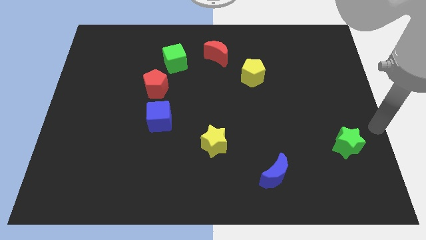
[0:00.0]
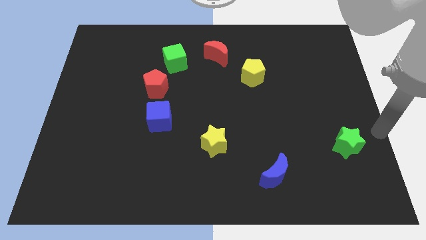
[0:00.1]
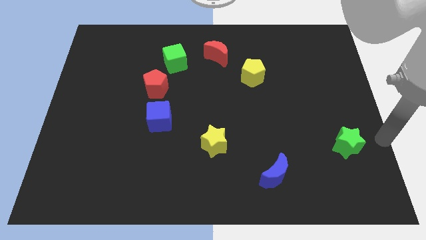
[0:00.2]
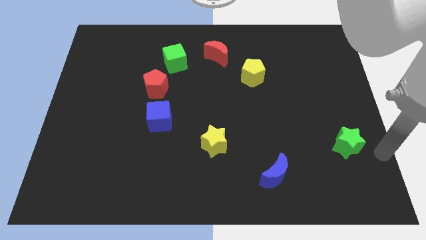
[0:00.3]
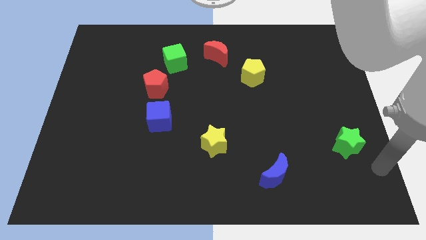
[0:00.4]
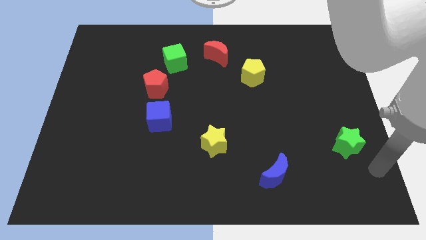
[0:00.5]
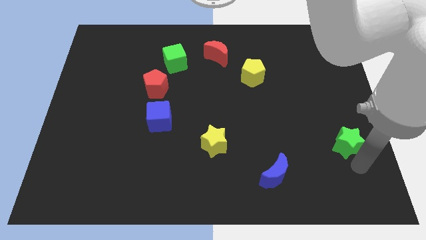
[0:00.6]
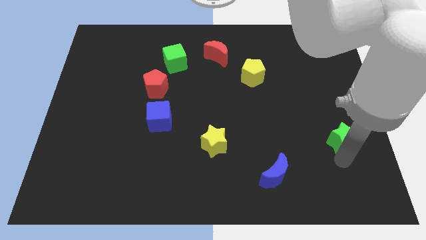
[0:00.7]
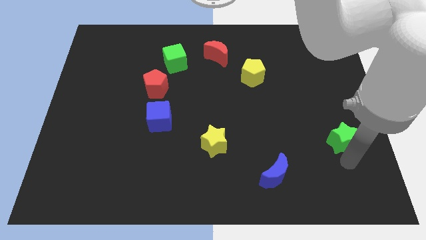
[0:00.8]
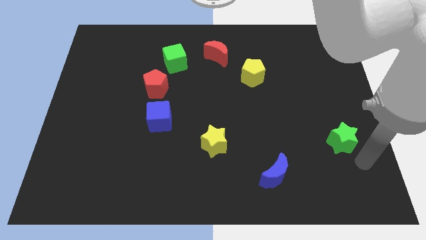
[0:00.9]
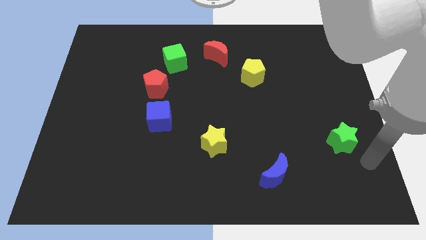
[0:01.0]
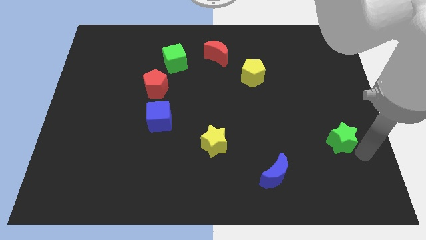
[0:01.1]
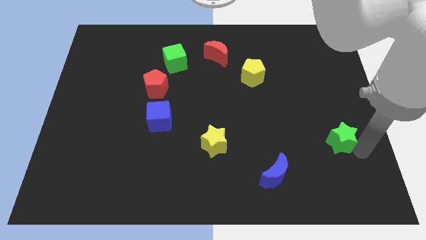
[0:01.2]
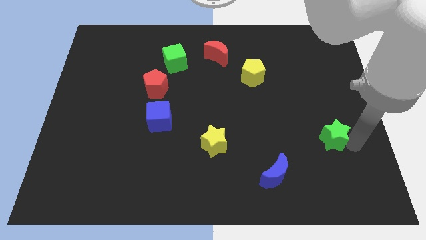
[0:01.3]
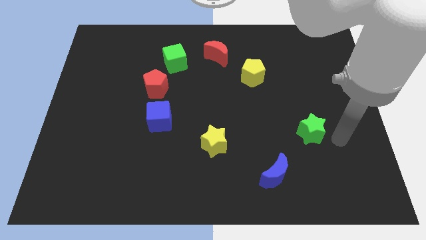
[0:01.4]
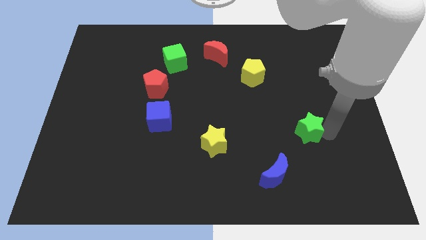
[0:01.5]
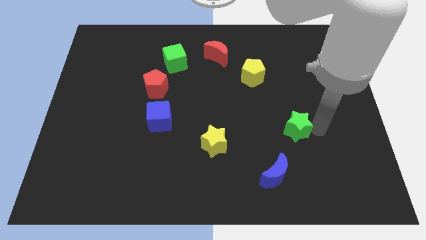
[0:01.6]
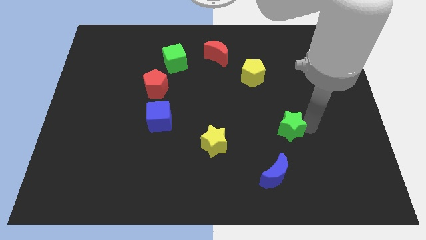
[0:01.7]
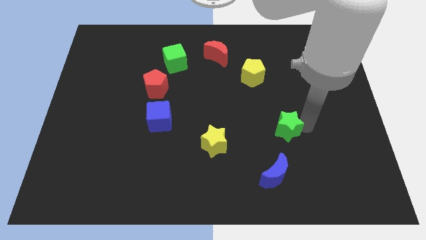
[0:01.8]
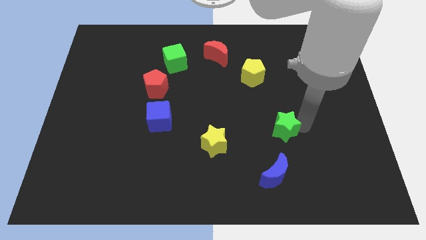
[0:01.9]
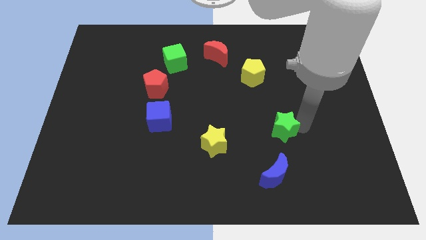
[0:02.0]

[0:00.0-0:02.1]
move the green star towards center

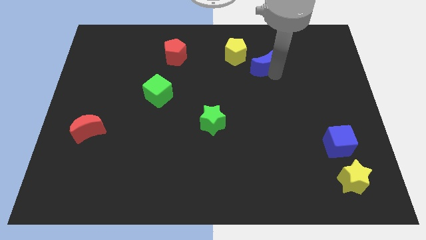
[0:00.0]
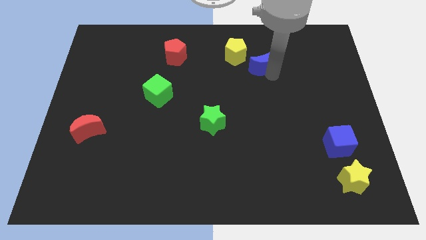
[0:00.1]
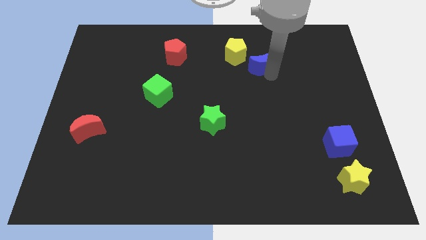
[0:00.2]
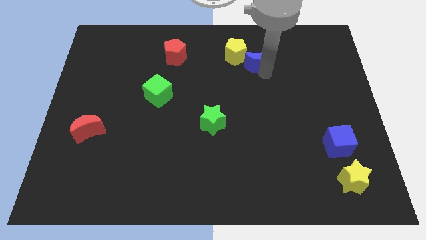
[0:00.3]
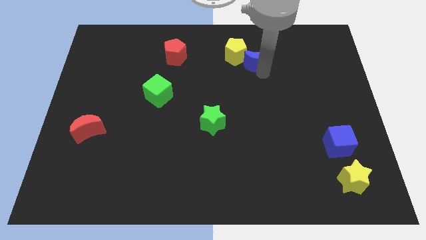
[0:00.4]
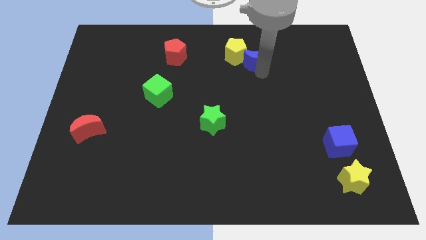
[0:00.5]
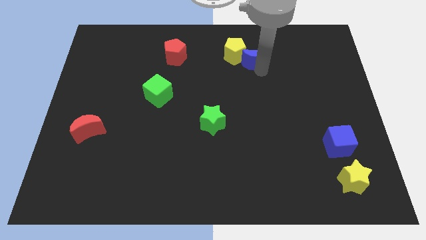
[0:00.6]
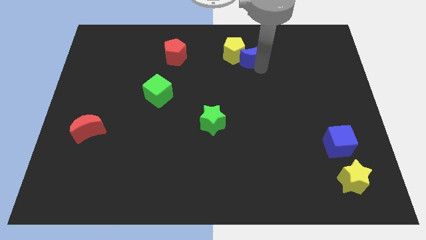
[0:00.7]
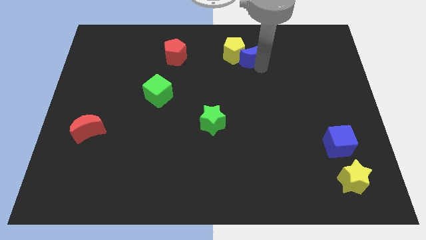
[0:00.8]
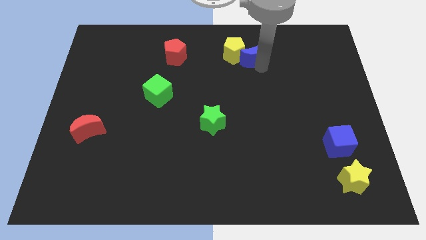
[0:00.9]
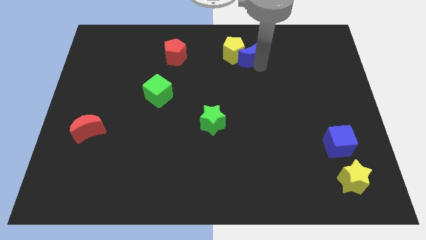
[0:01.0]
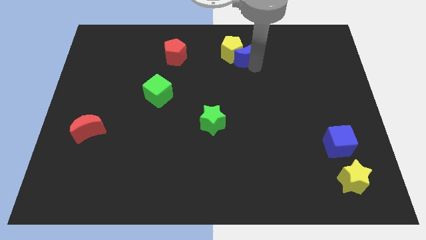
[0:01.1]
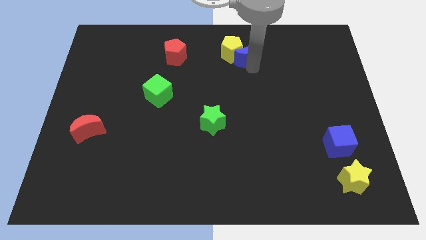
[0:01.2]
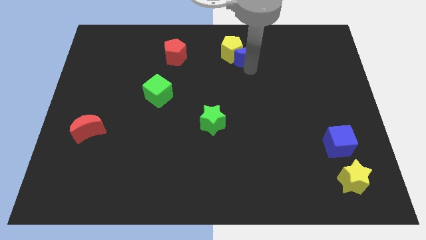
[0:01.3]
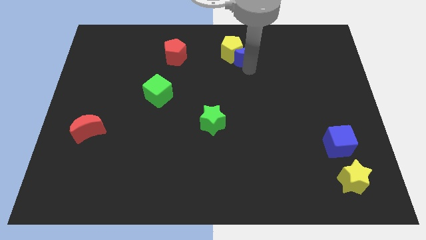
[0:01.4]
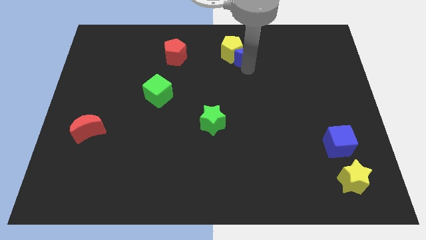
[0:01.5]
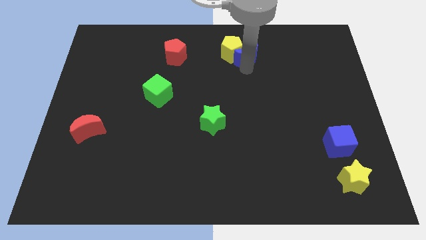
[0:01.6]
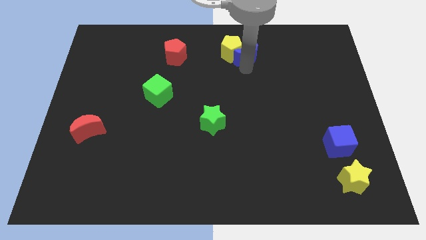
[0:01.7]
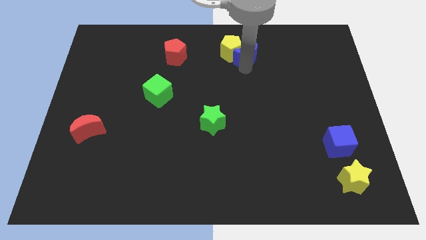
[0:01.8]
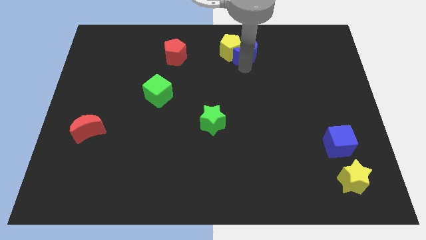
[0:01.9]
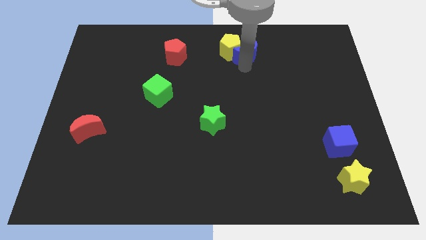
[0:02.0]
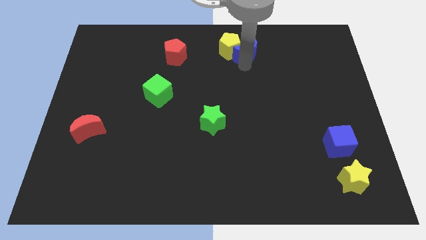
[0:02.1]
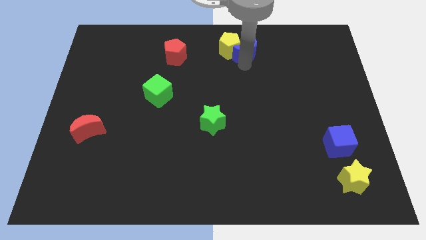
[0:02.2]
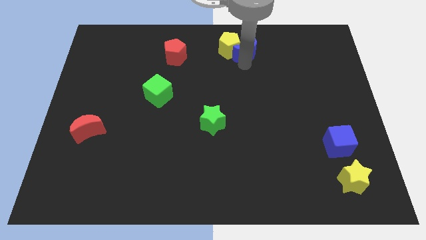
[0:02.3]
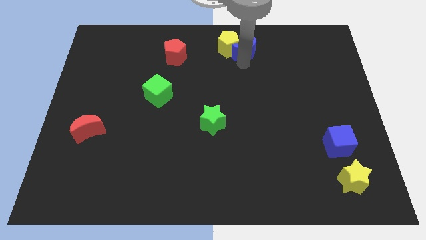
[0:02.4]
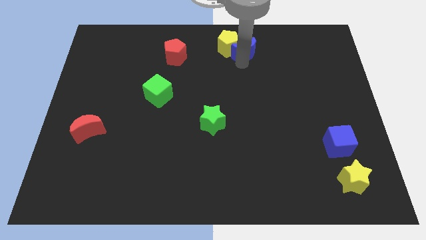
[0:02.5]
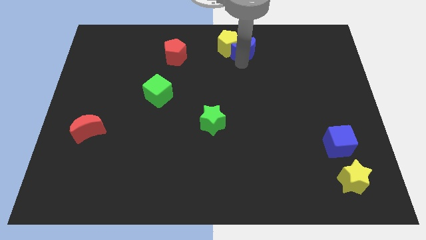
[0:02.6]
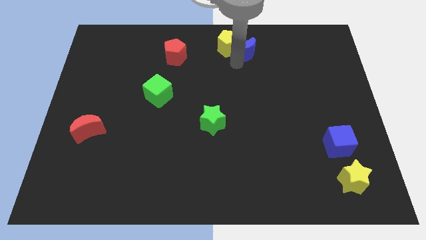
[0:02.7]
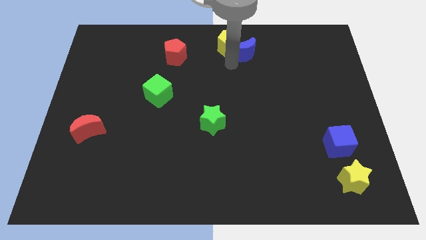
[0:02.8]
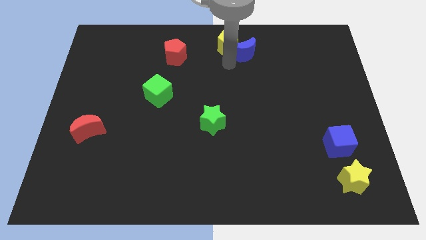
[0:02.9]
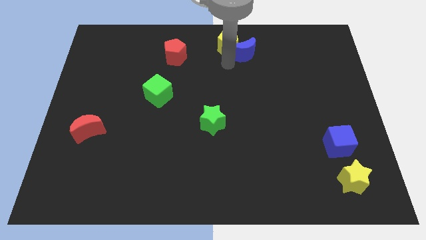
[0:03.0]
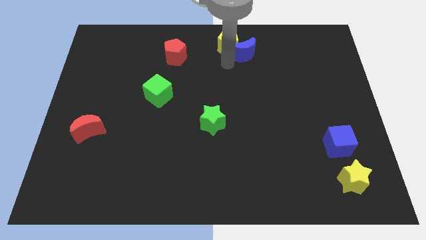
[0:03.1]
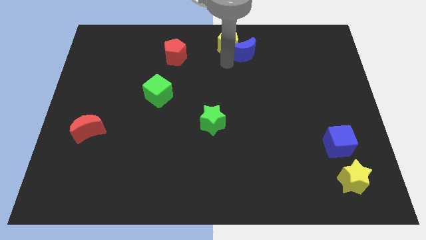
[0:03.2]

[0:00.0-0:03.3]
push blue crescent slightly towards up

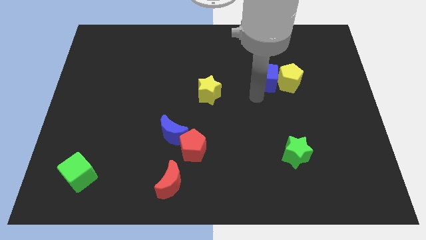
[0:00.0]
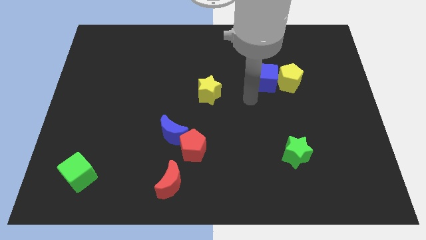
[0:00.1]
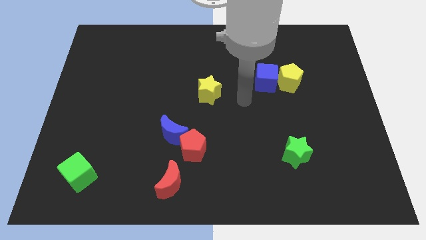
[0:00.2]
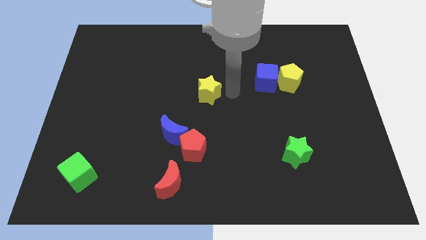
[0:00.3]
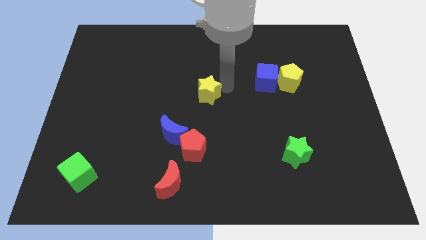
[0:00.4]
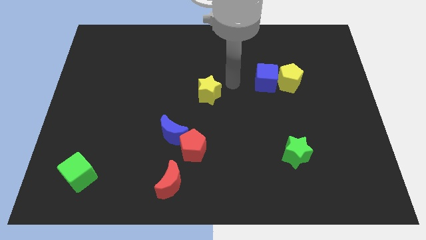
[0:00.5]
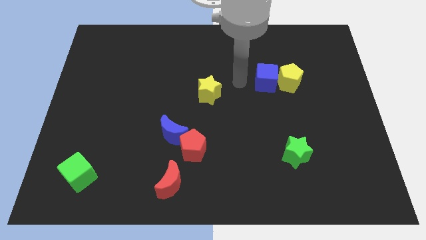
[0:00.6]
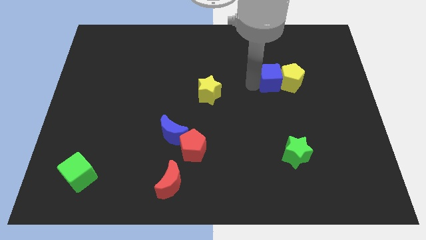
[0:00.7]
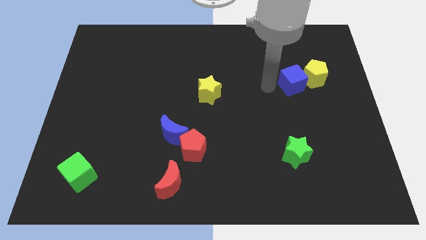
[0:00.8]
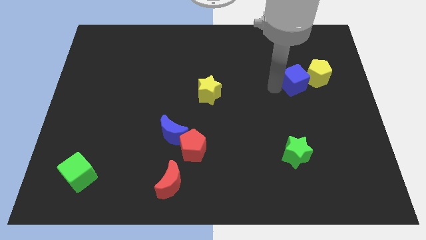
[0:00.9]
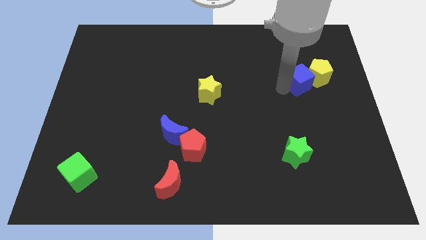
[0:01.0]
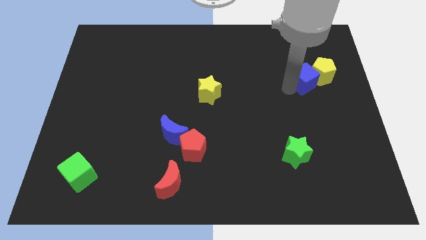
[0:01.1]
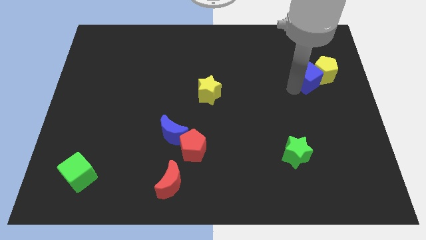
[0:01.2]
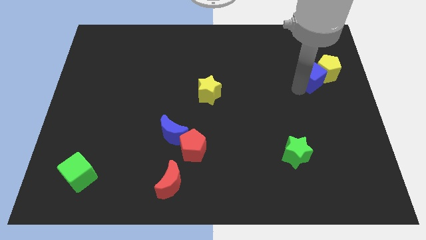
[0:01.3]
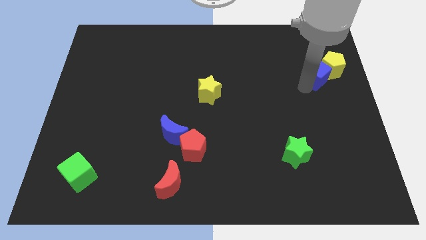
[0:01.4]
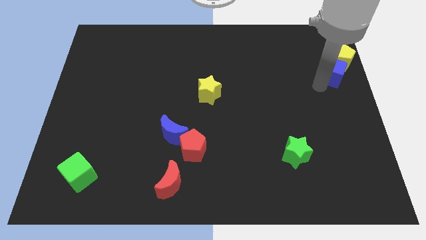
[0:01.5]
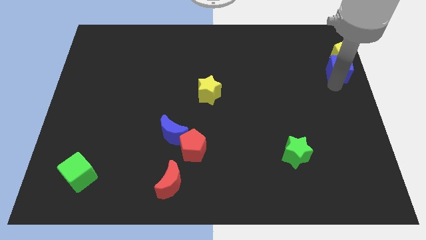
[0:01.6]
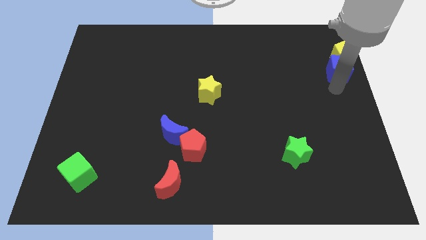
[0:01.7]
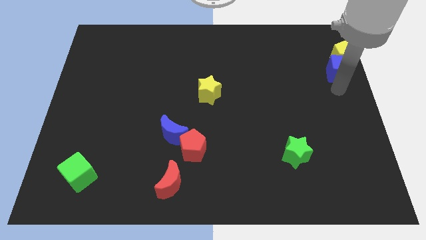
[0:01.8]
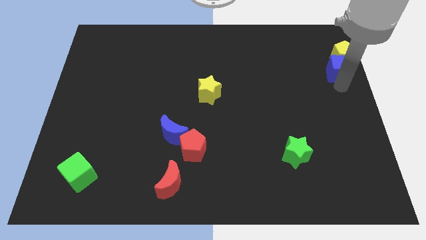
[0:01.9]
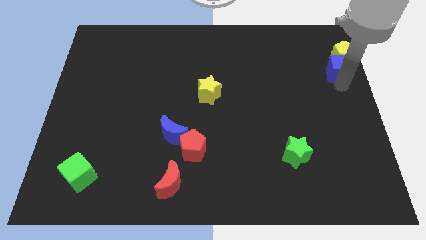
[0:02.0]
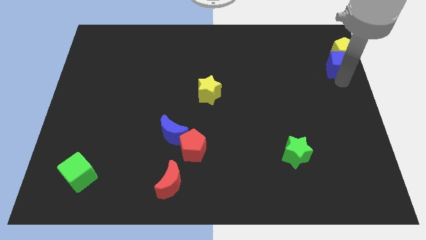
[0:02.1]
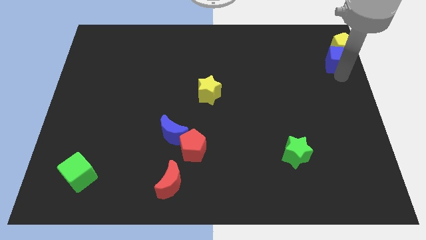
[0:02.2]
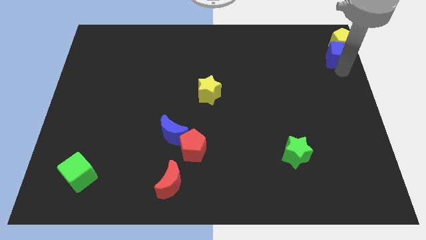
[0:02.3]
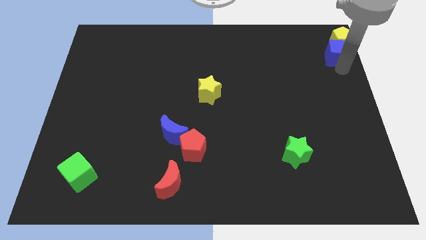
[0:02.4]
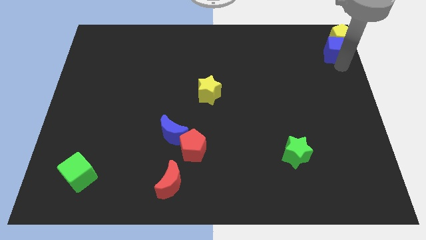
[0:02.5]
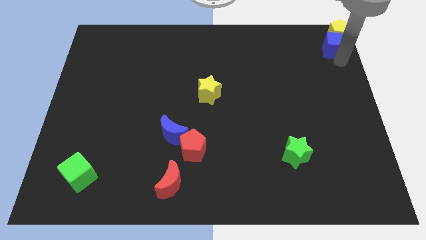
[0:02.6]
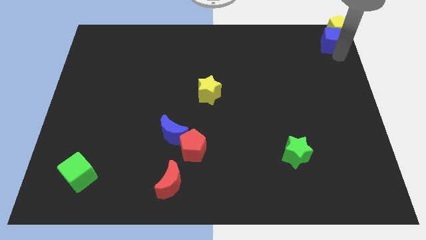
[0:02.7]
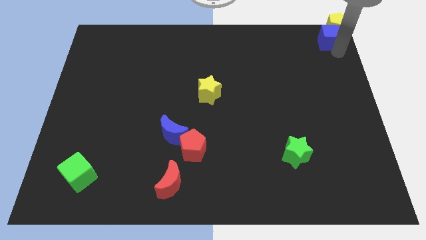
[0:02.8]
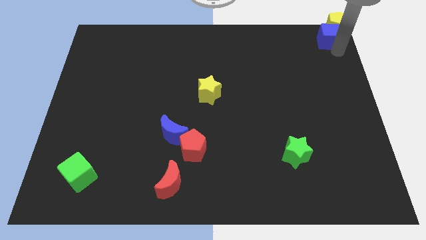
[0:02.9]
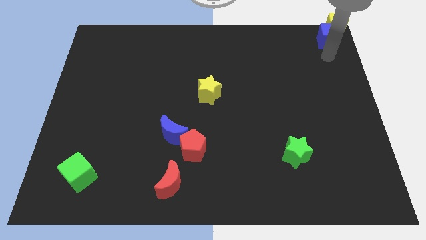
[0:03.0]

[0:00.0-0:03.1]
push blue cube and yellow pentagon to top right corner

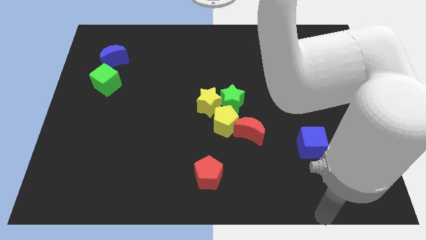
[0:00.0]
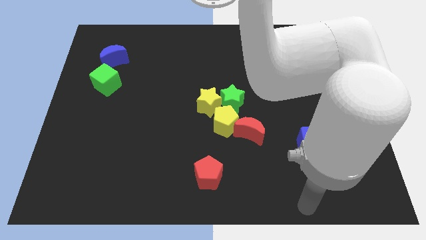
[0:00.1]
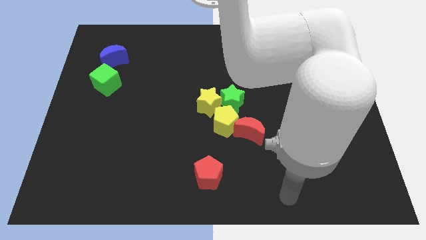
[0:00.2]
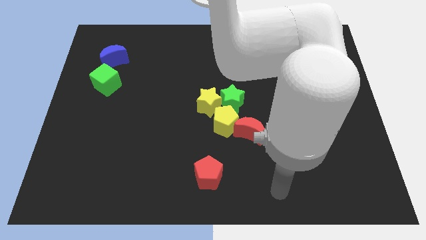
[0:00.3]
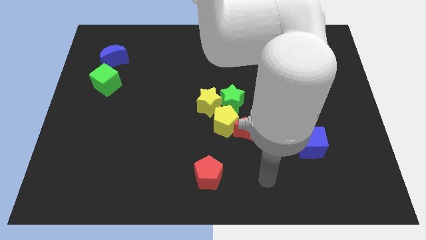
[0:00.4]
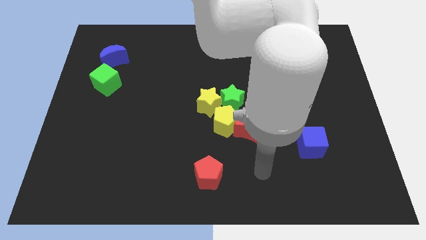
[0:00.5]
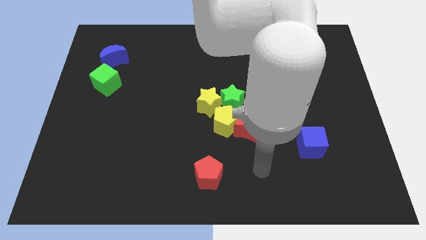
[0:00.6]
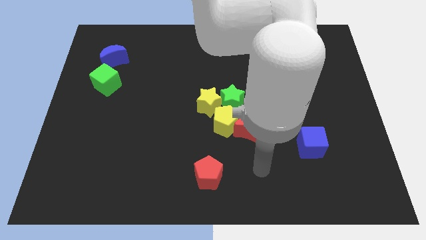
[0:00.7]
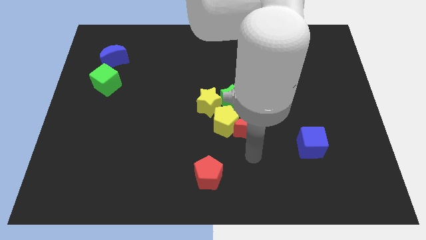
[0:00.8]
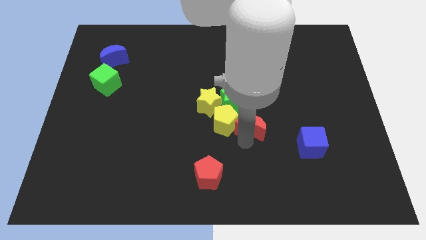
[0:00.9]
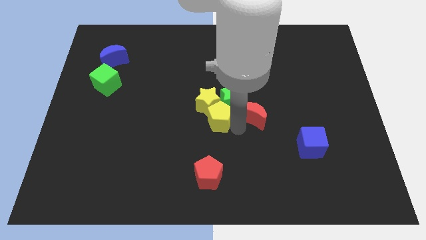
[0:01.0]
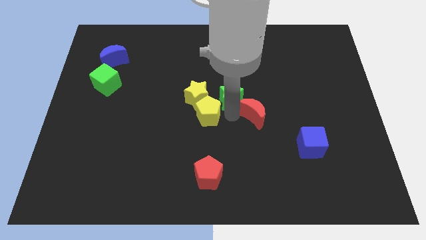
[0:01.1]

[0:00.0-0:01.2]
separate the red crescent from the yellow pentagon
